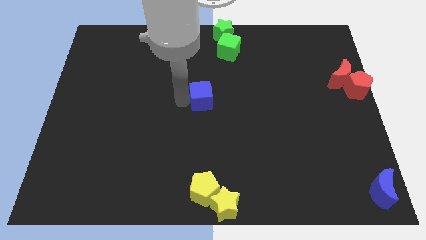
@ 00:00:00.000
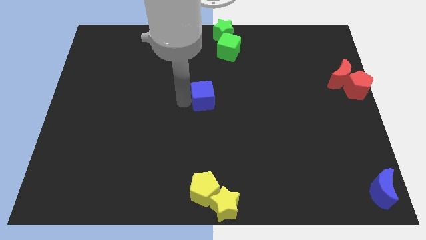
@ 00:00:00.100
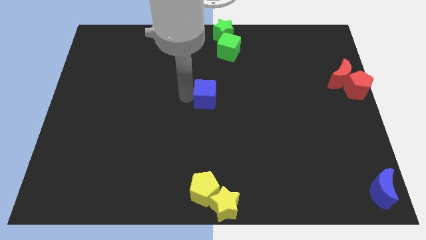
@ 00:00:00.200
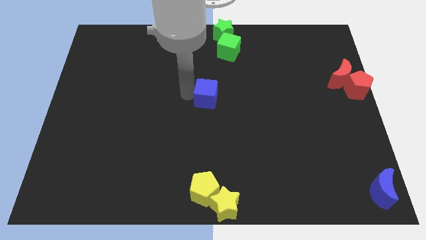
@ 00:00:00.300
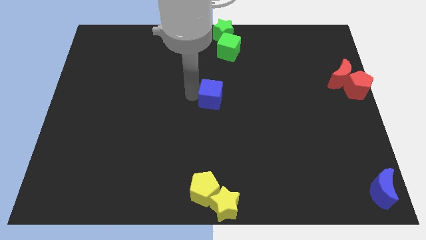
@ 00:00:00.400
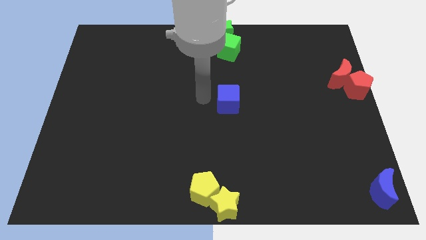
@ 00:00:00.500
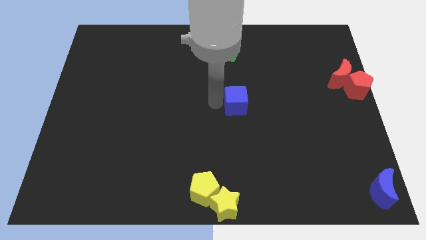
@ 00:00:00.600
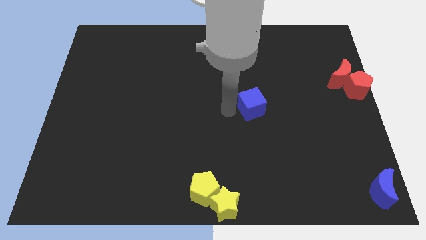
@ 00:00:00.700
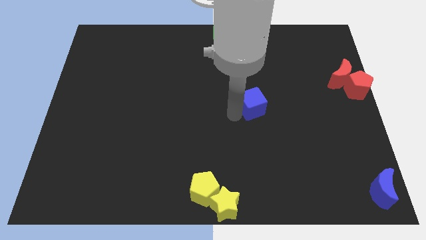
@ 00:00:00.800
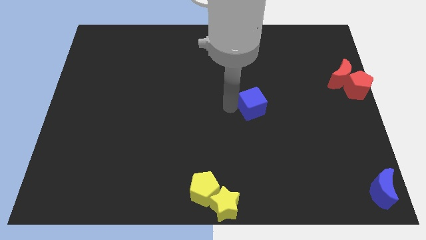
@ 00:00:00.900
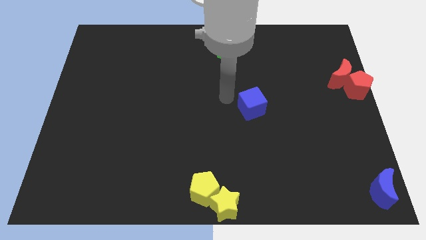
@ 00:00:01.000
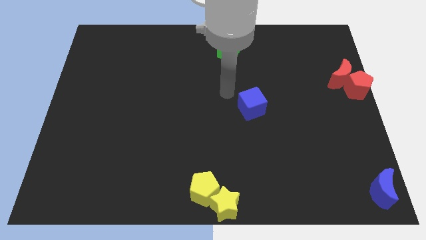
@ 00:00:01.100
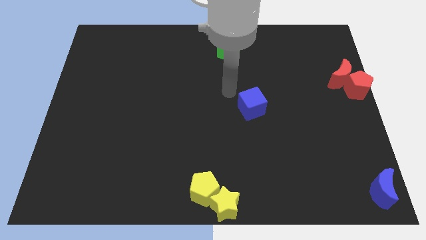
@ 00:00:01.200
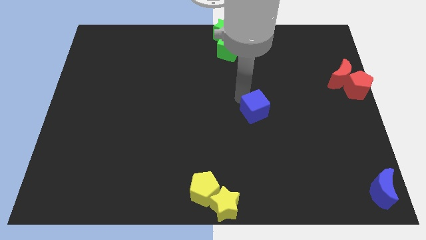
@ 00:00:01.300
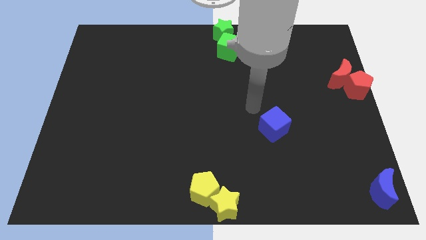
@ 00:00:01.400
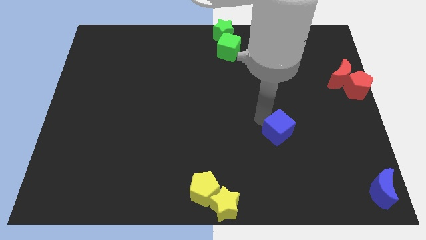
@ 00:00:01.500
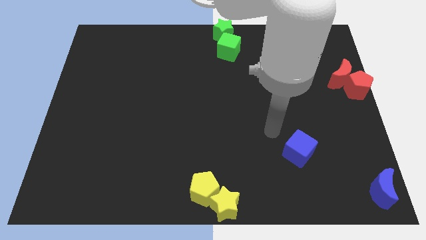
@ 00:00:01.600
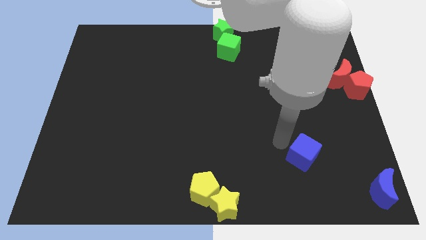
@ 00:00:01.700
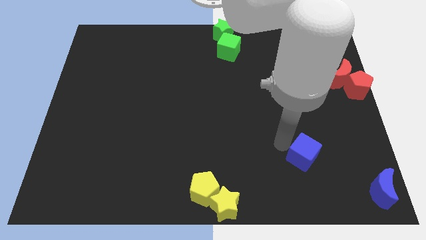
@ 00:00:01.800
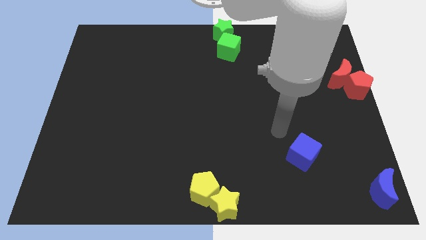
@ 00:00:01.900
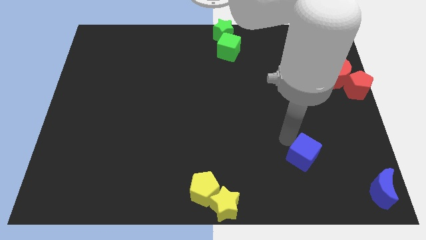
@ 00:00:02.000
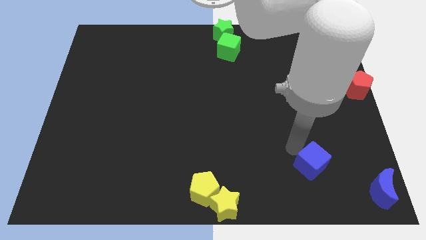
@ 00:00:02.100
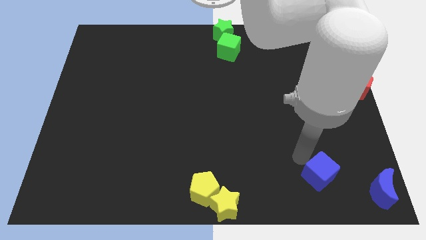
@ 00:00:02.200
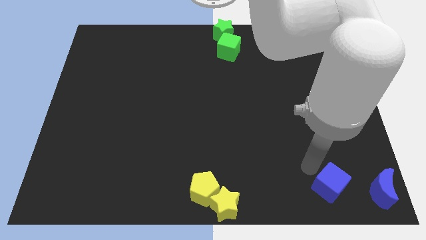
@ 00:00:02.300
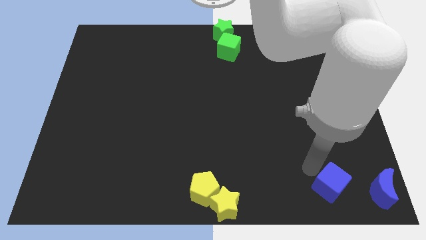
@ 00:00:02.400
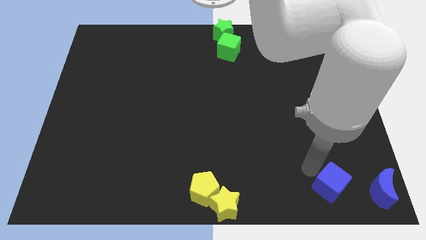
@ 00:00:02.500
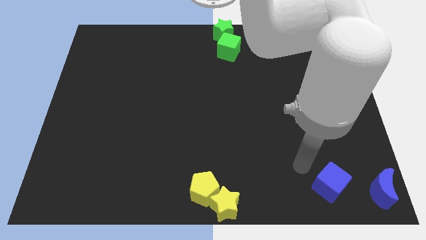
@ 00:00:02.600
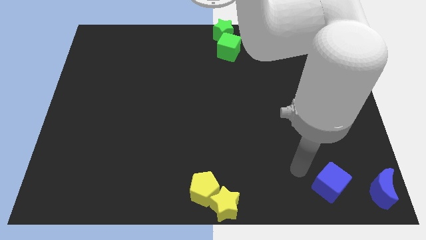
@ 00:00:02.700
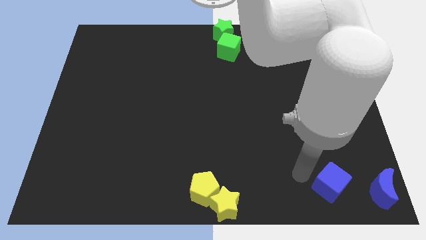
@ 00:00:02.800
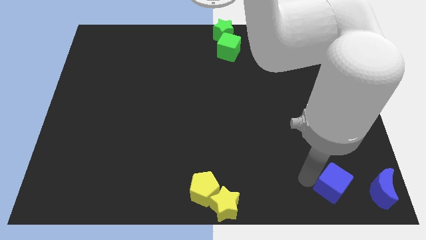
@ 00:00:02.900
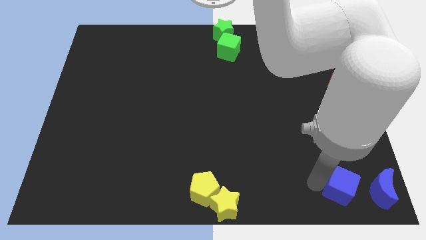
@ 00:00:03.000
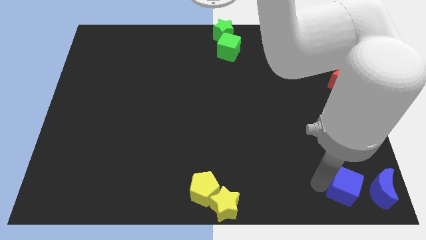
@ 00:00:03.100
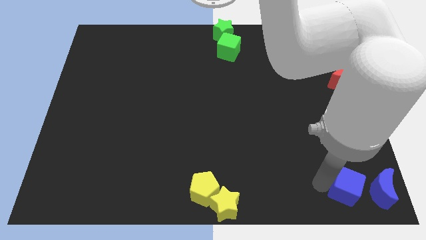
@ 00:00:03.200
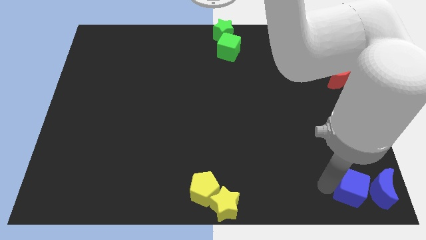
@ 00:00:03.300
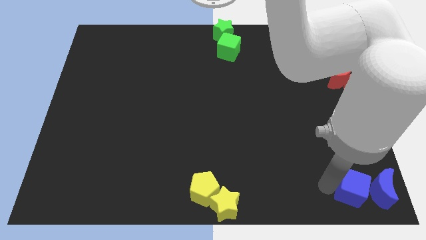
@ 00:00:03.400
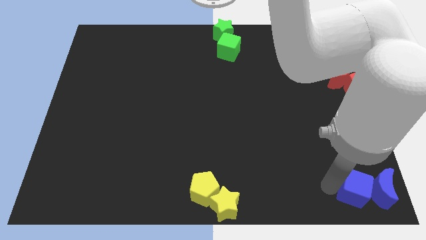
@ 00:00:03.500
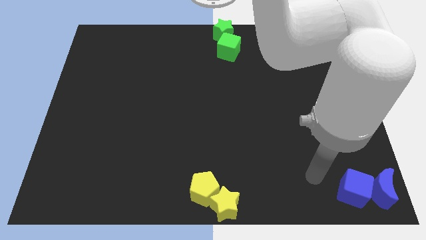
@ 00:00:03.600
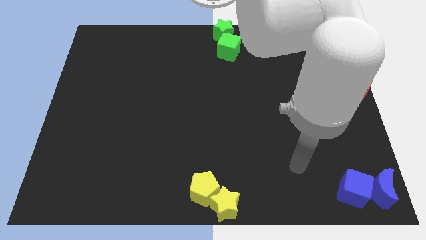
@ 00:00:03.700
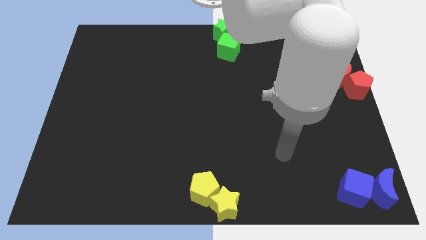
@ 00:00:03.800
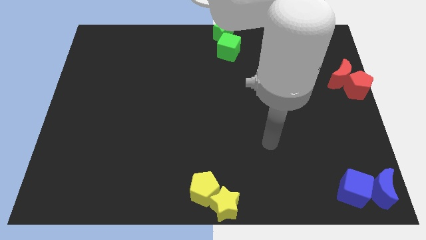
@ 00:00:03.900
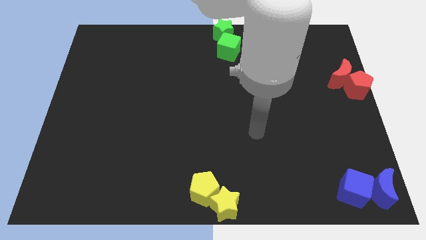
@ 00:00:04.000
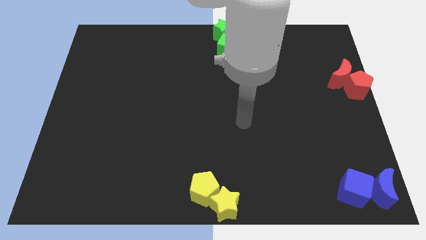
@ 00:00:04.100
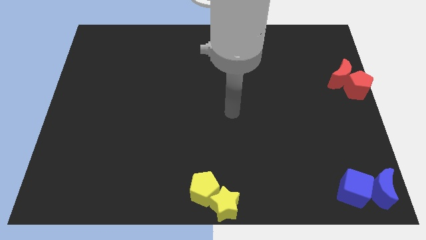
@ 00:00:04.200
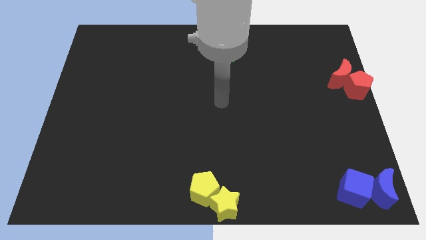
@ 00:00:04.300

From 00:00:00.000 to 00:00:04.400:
push the blue cube into the blue moon

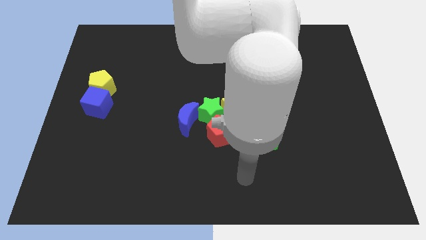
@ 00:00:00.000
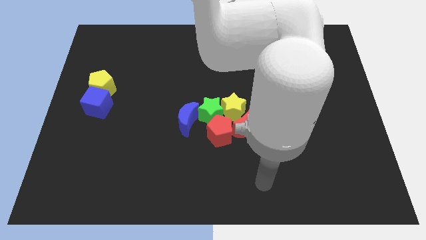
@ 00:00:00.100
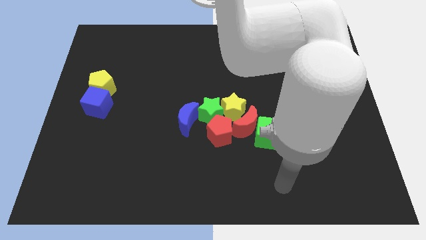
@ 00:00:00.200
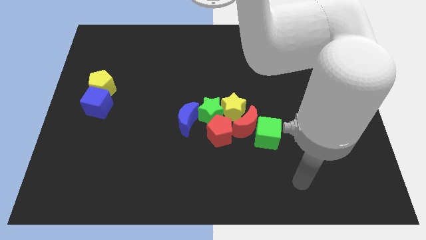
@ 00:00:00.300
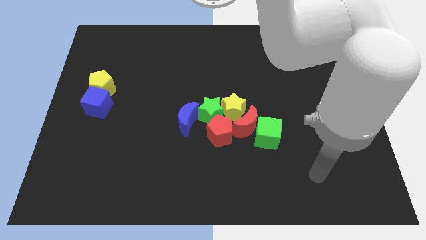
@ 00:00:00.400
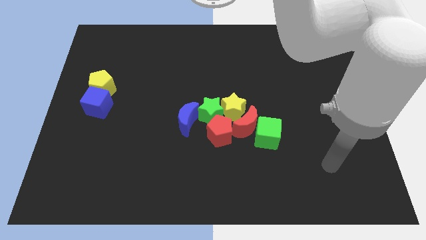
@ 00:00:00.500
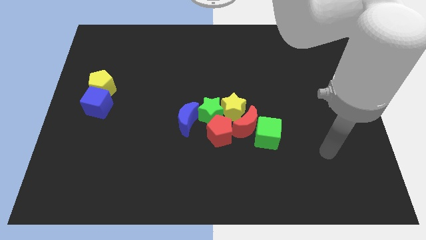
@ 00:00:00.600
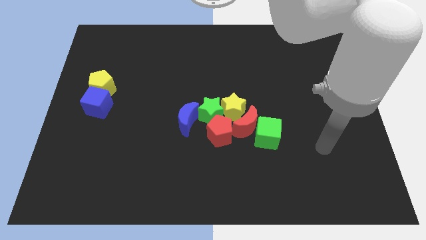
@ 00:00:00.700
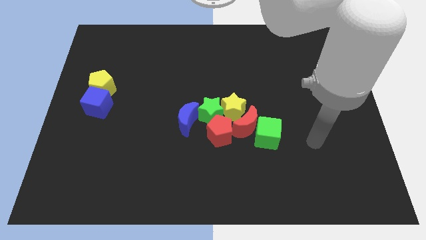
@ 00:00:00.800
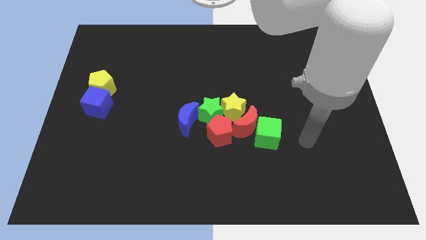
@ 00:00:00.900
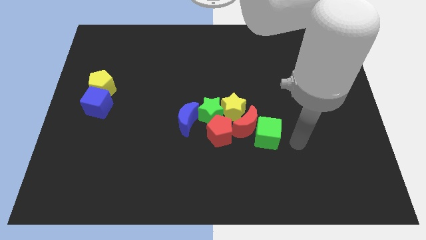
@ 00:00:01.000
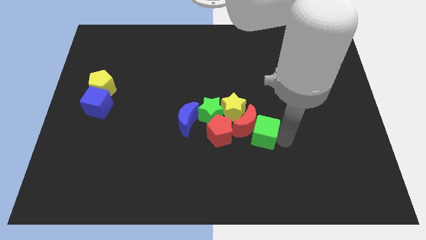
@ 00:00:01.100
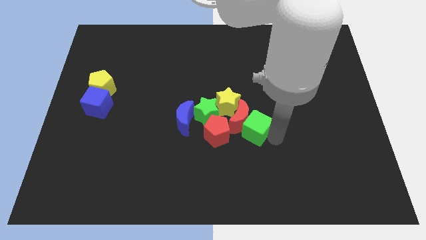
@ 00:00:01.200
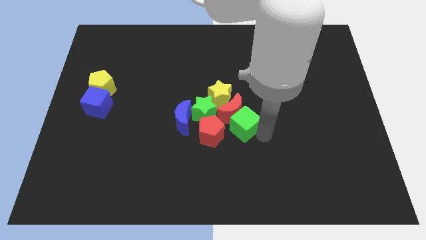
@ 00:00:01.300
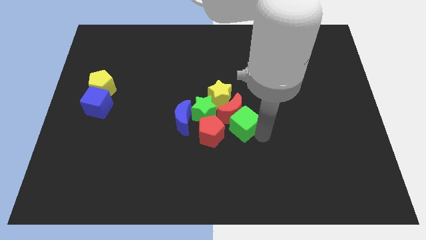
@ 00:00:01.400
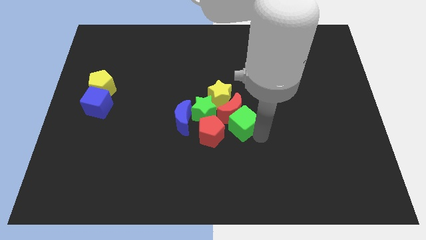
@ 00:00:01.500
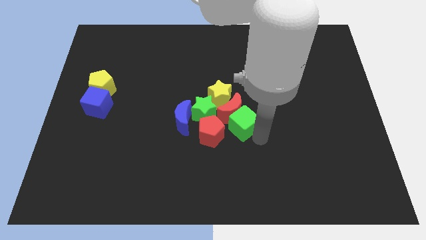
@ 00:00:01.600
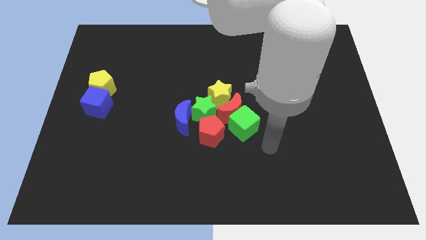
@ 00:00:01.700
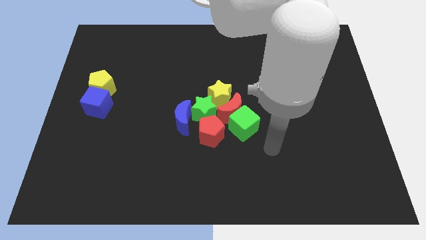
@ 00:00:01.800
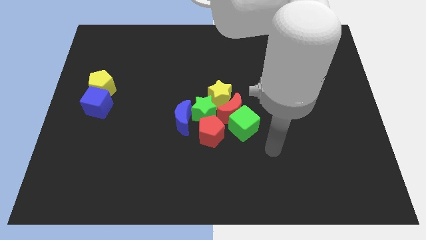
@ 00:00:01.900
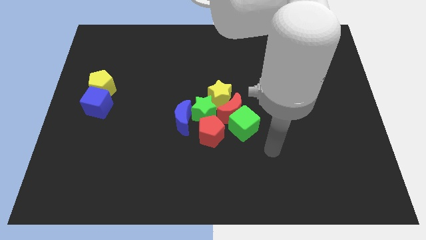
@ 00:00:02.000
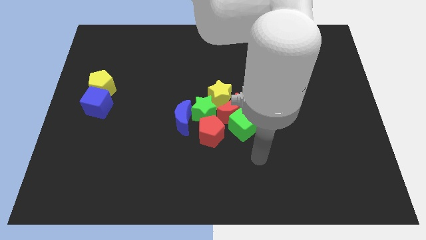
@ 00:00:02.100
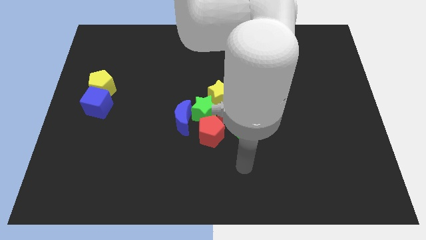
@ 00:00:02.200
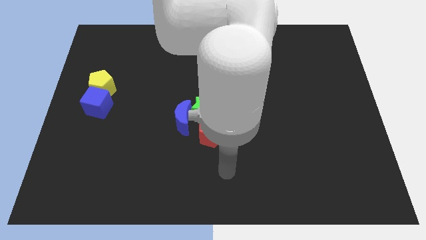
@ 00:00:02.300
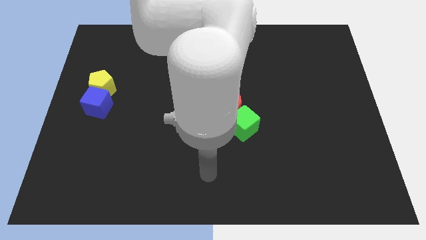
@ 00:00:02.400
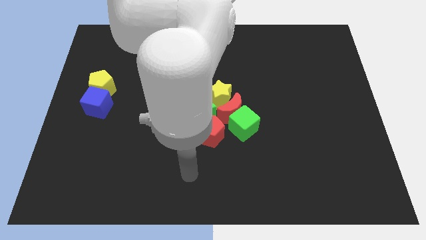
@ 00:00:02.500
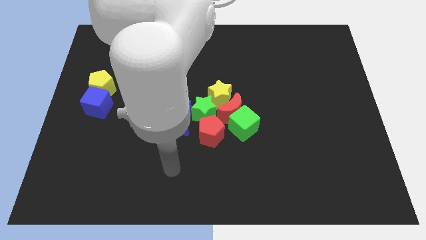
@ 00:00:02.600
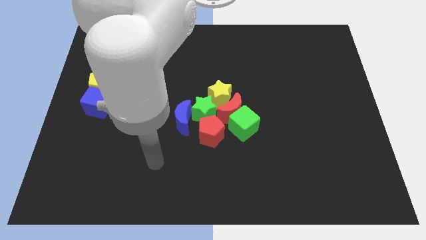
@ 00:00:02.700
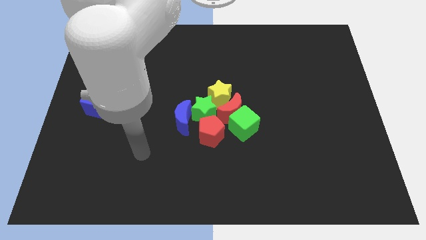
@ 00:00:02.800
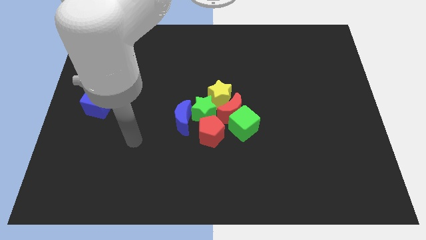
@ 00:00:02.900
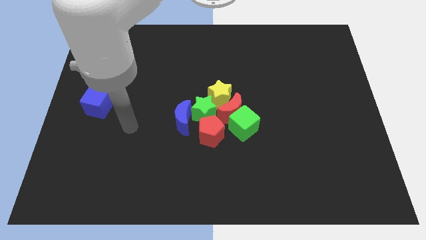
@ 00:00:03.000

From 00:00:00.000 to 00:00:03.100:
push the green cube towards the group of blocks

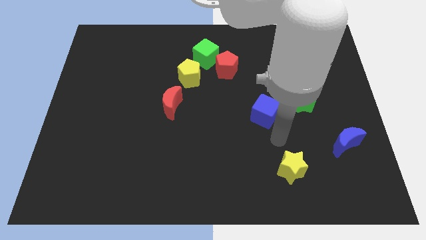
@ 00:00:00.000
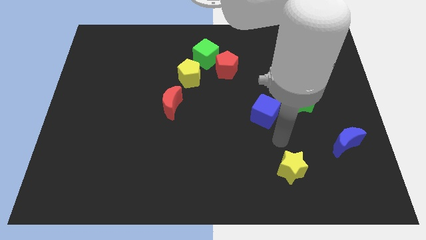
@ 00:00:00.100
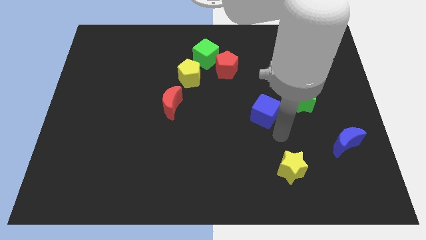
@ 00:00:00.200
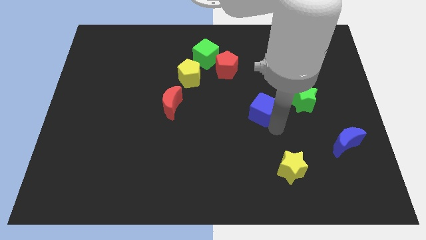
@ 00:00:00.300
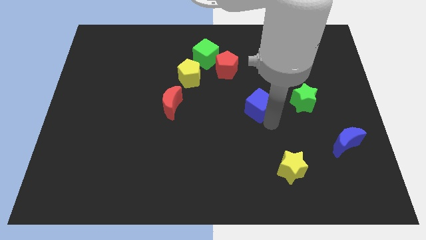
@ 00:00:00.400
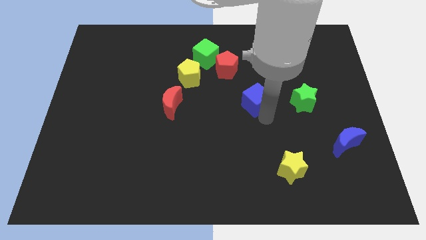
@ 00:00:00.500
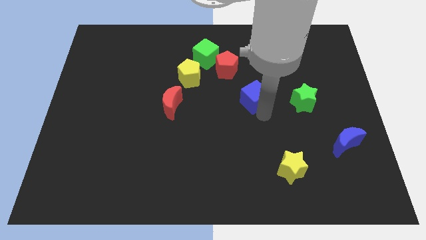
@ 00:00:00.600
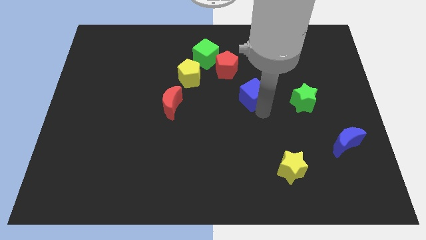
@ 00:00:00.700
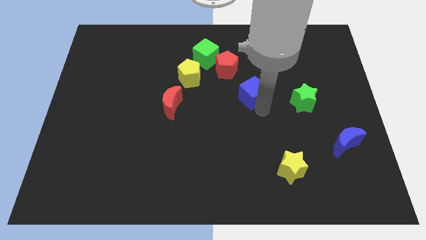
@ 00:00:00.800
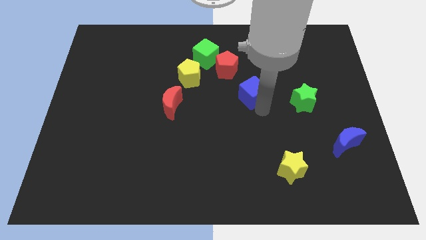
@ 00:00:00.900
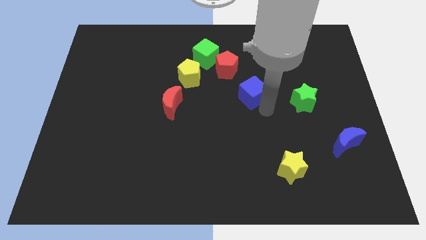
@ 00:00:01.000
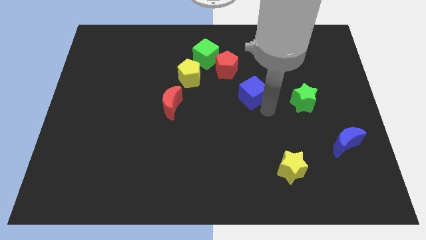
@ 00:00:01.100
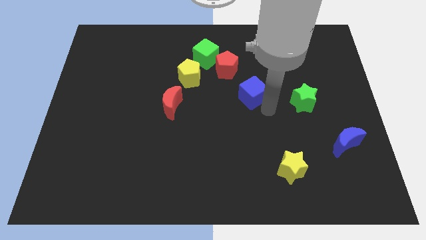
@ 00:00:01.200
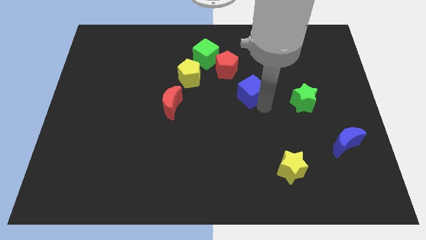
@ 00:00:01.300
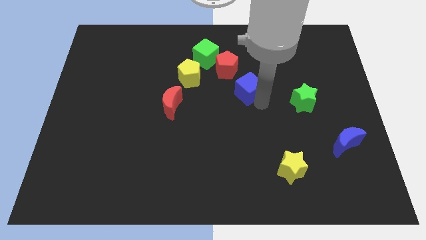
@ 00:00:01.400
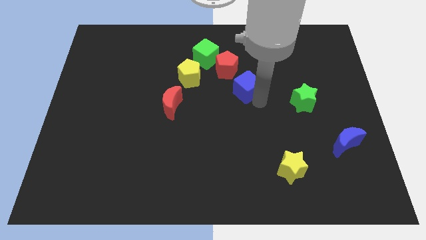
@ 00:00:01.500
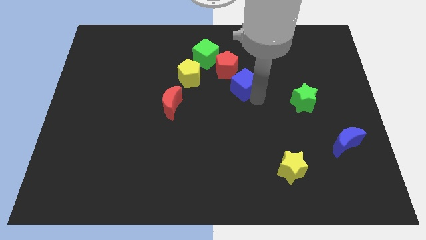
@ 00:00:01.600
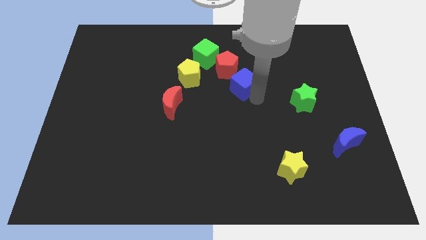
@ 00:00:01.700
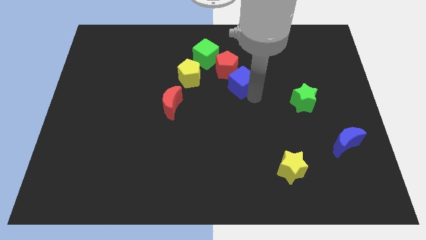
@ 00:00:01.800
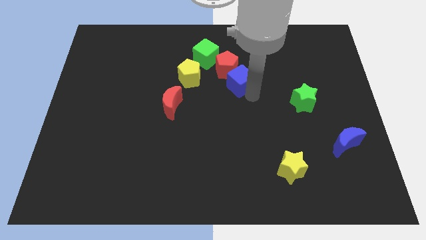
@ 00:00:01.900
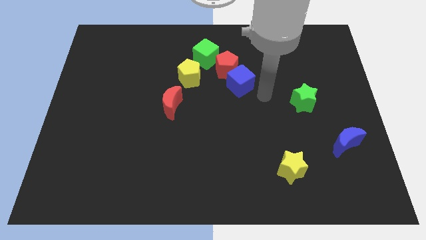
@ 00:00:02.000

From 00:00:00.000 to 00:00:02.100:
place the blue cube diagonal to the red pentagon
